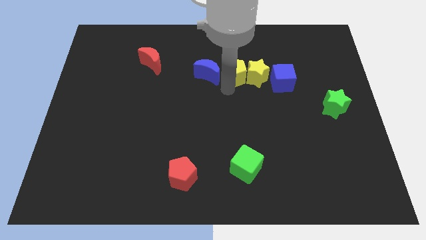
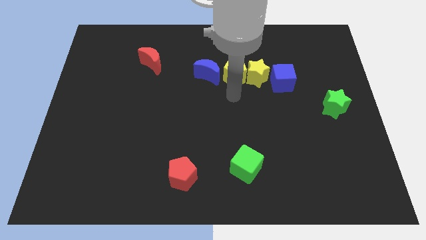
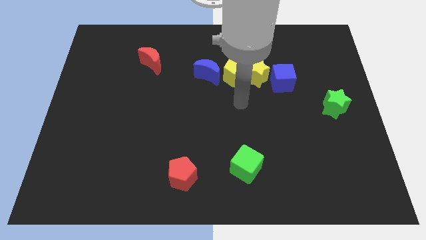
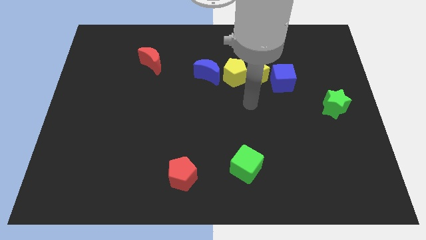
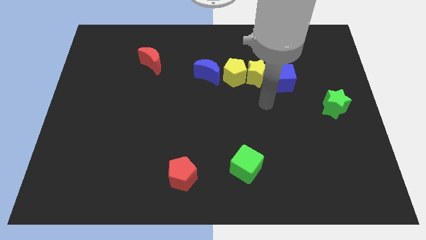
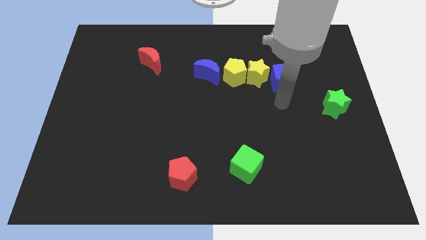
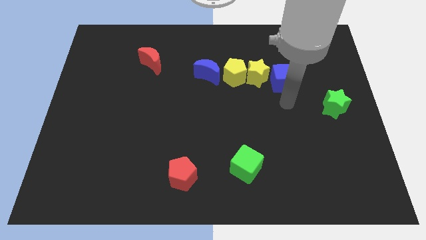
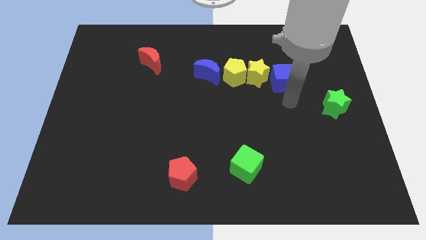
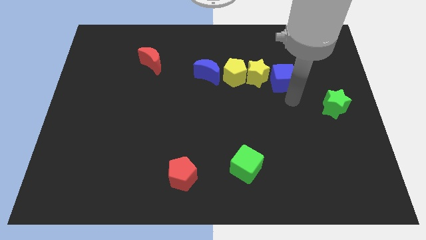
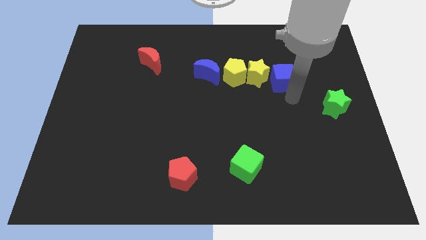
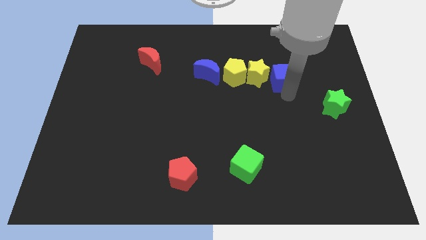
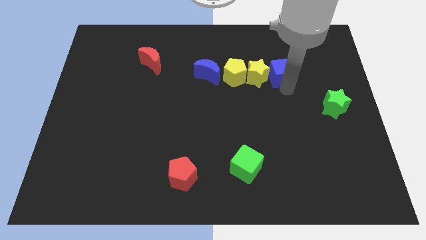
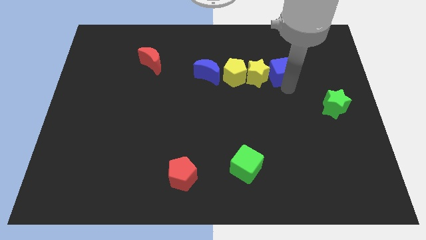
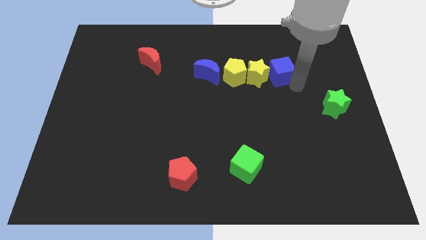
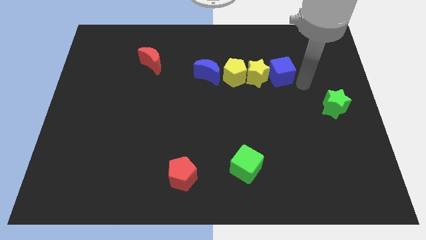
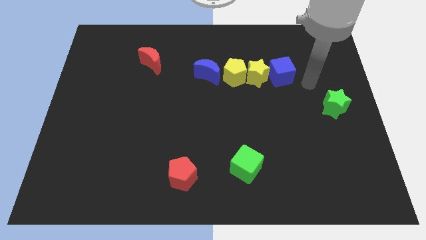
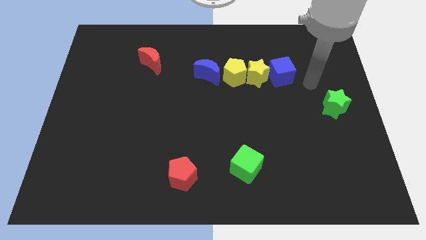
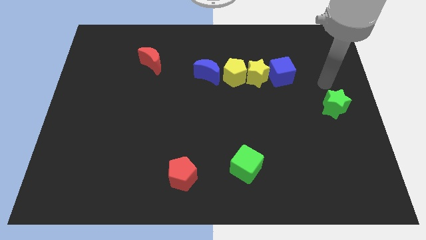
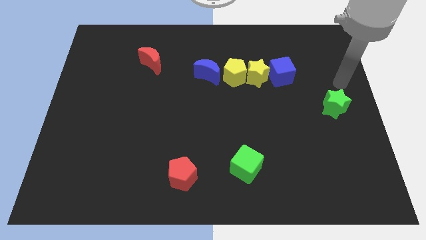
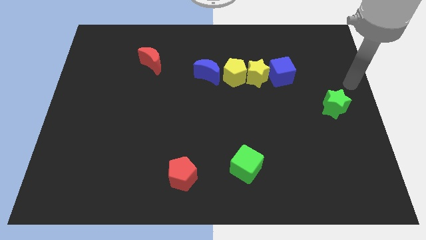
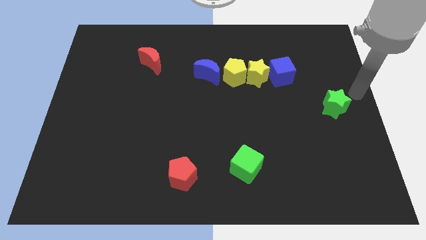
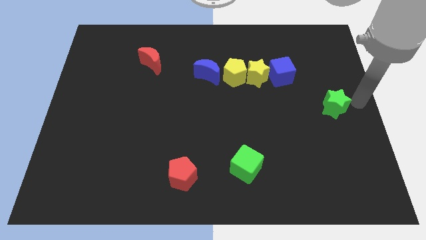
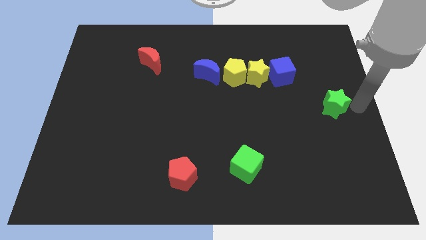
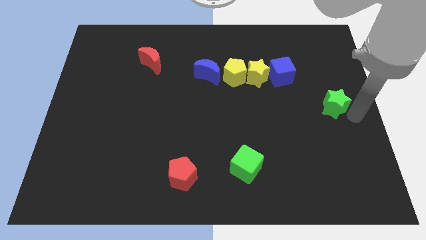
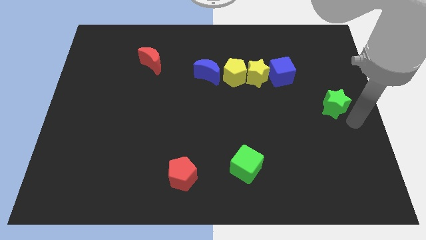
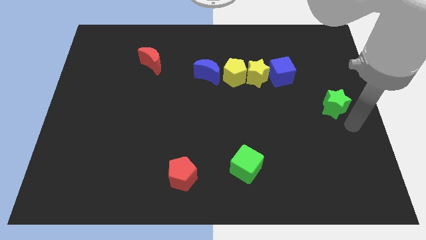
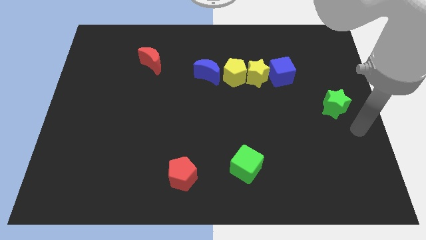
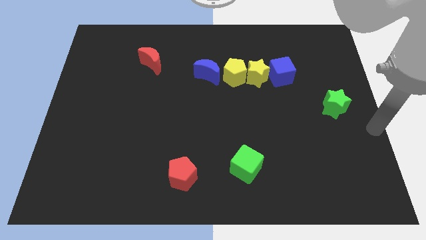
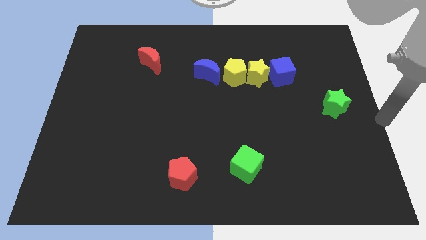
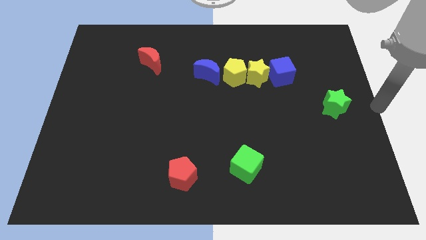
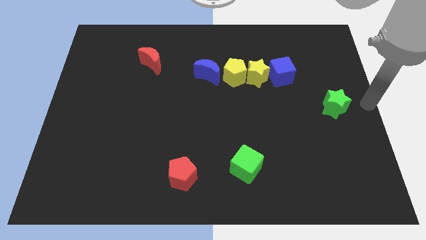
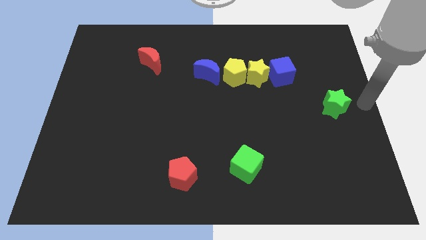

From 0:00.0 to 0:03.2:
point your hand at the right side of the green star

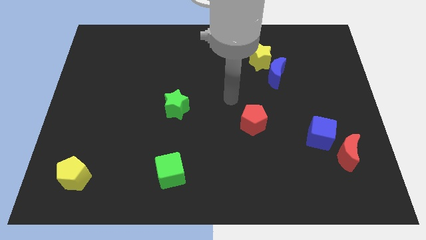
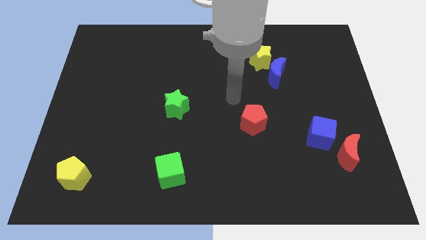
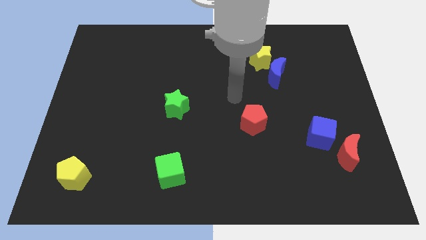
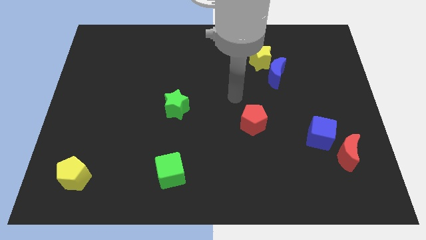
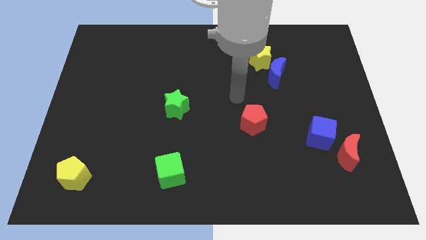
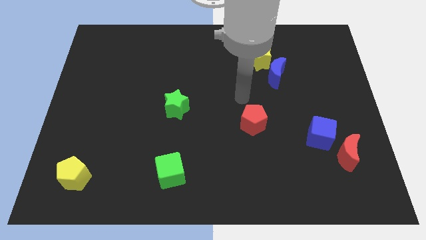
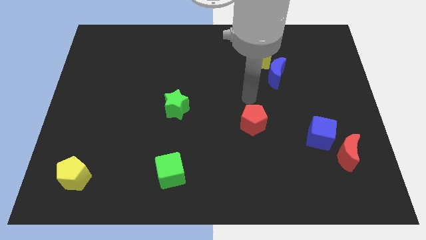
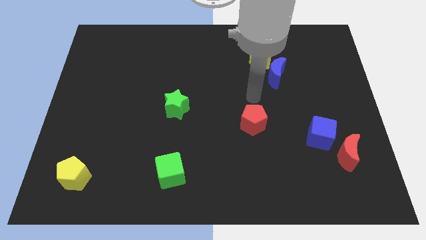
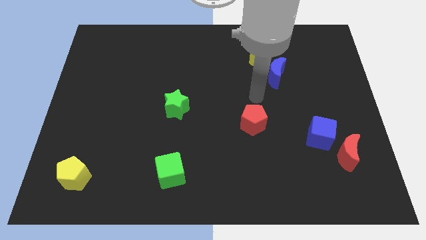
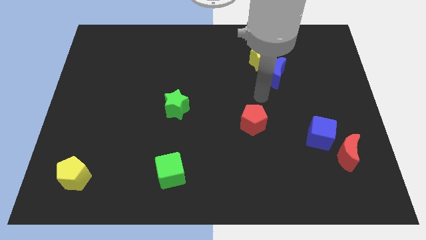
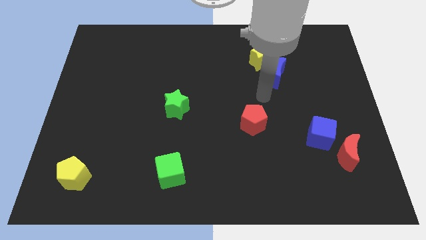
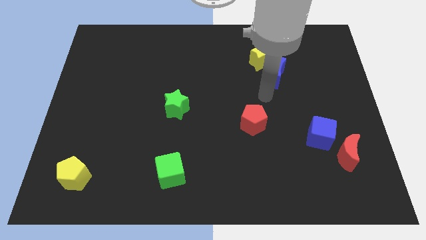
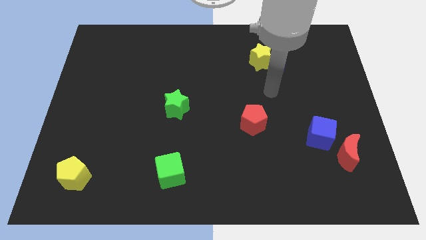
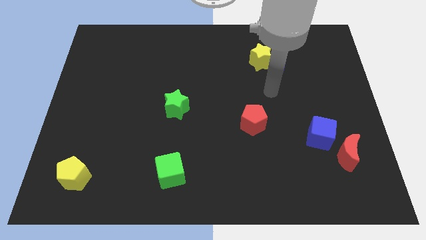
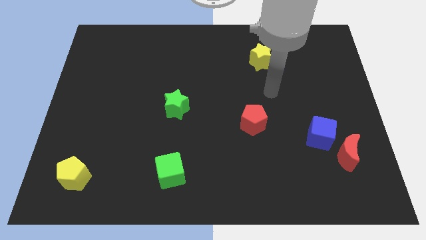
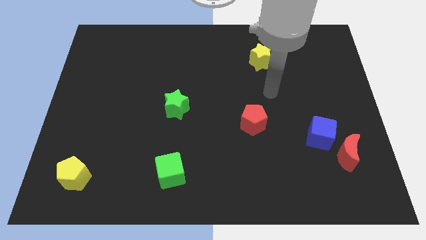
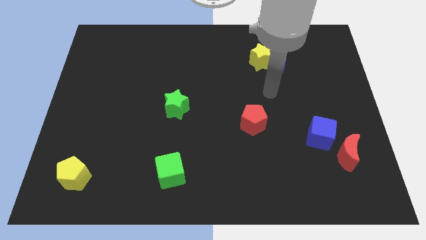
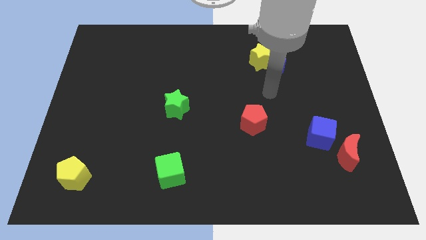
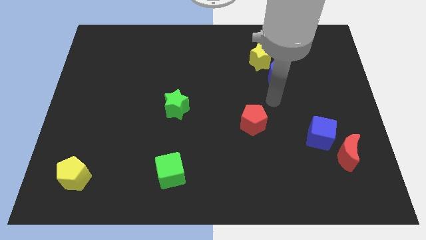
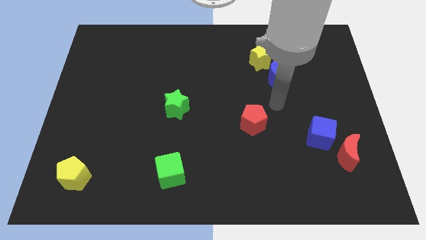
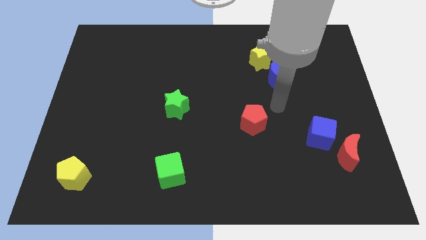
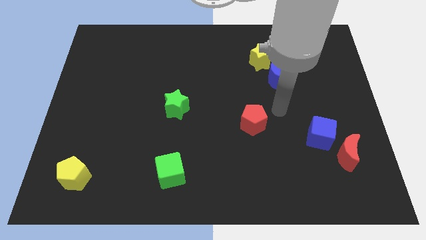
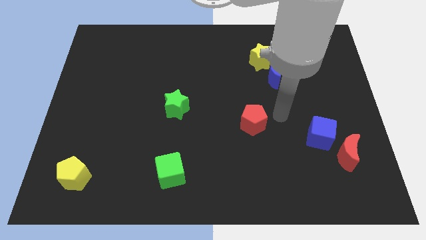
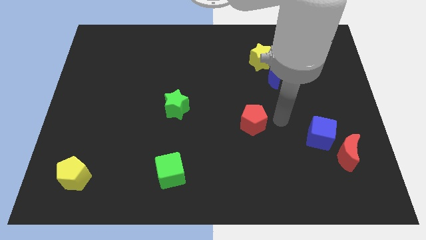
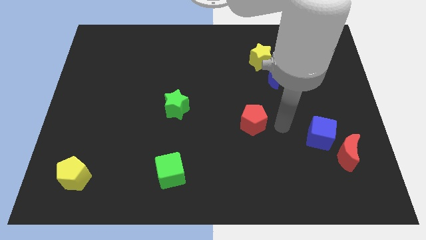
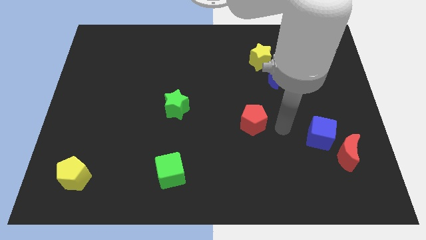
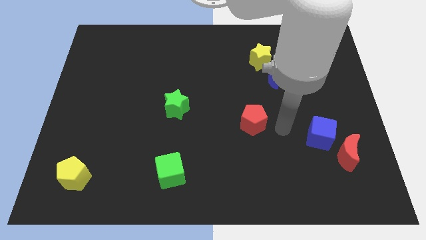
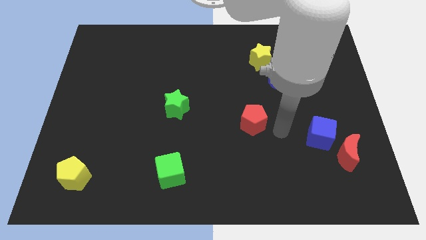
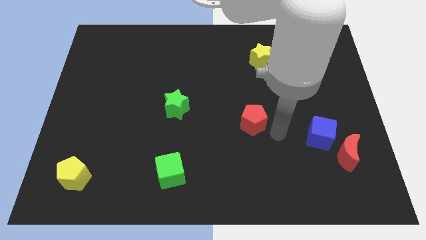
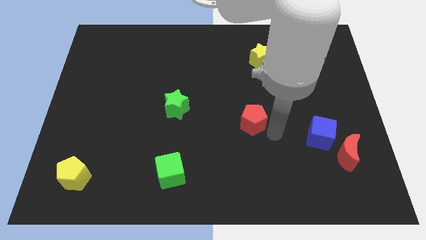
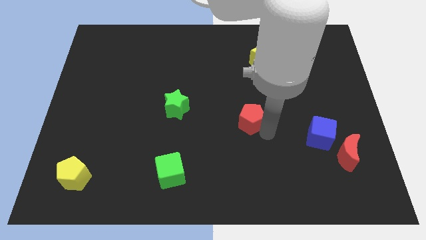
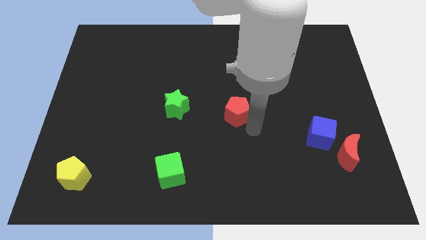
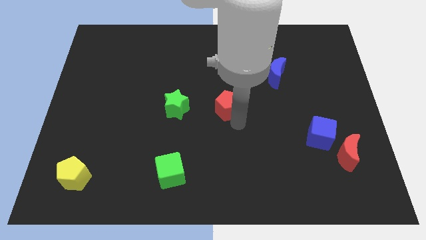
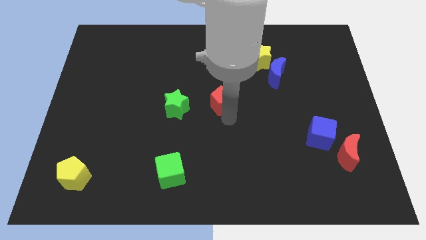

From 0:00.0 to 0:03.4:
slide the red pentagon towards the center of the board

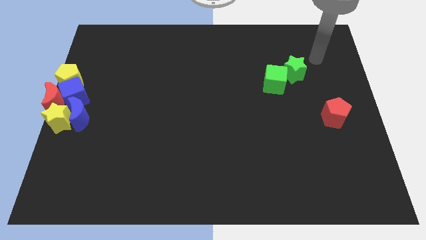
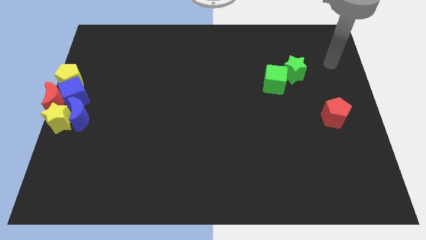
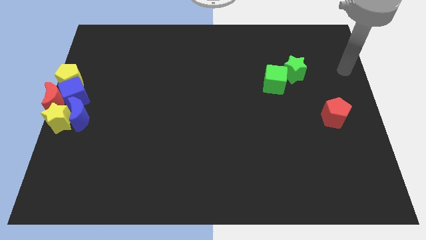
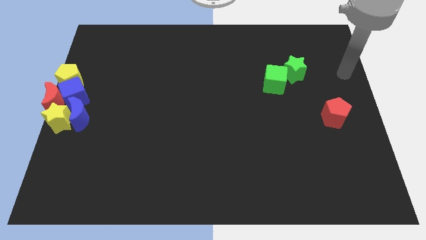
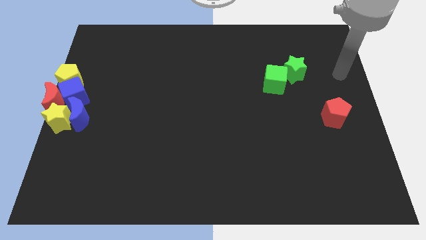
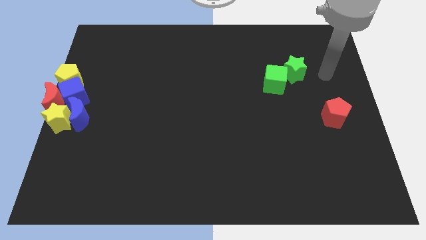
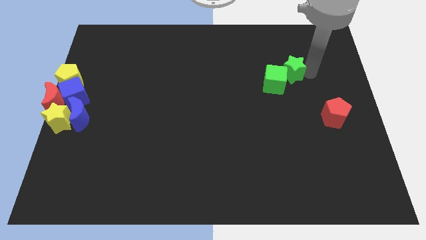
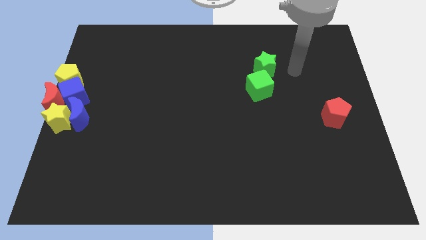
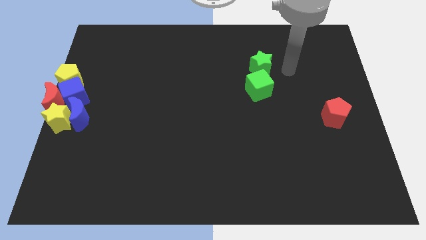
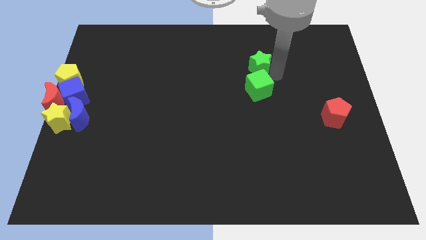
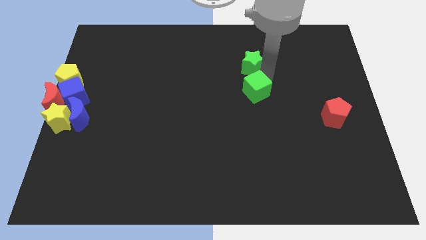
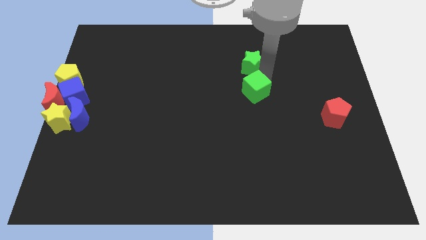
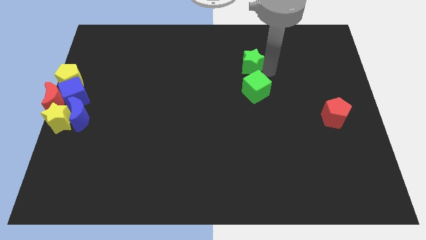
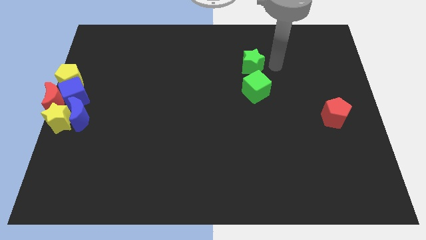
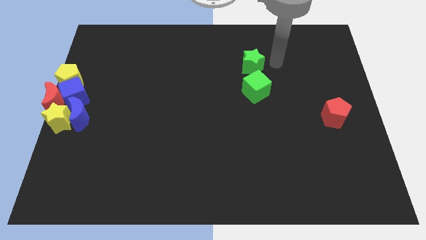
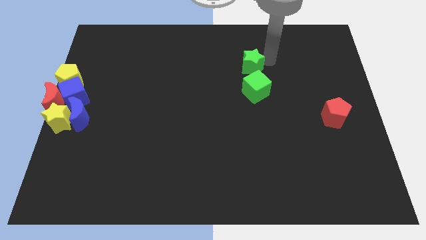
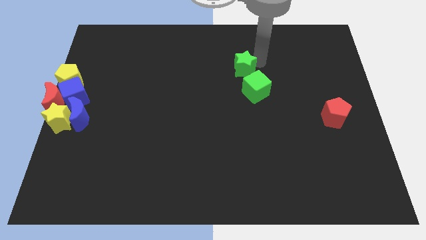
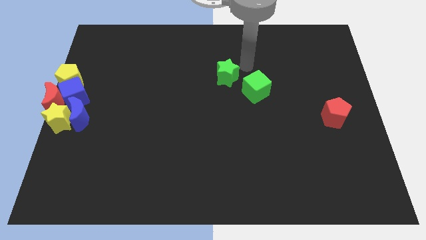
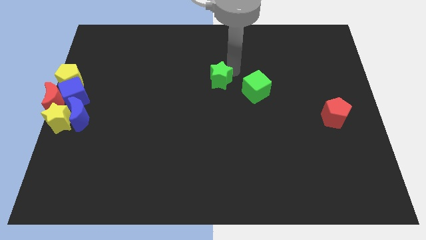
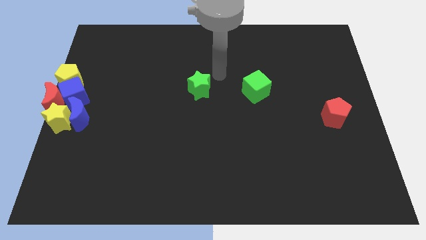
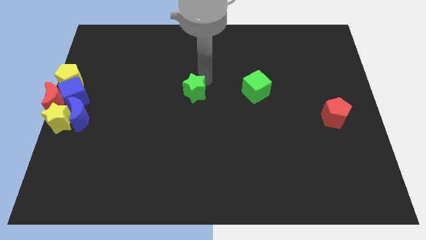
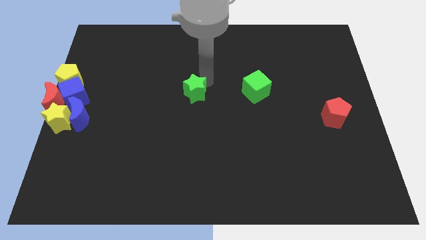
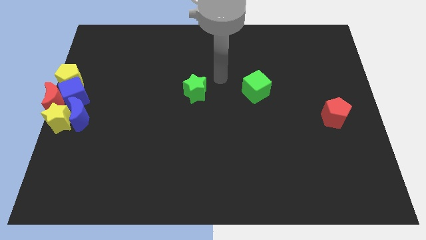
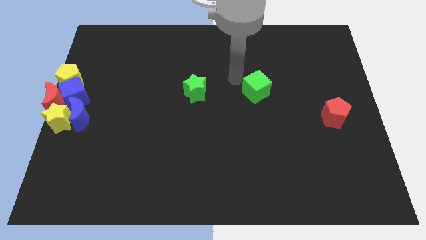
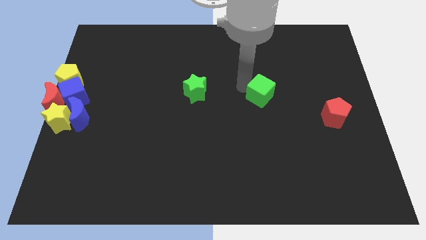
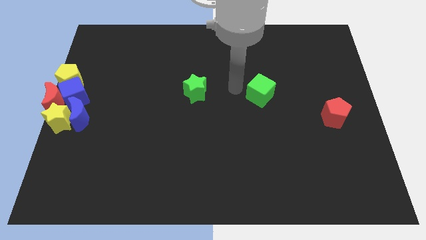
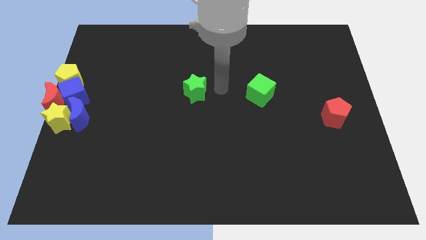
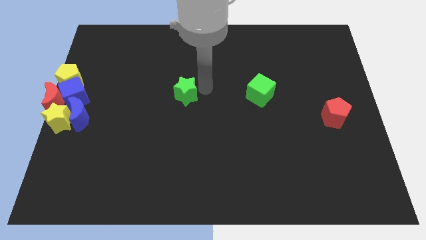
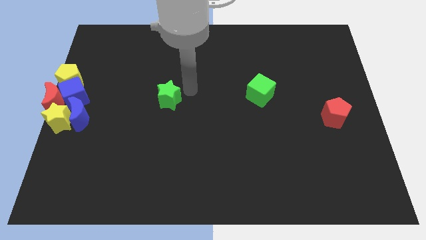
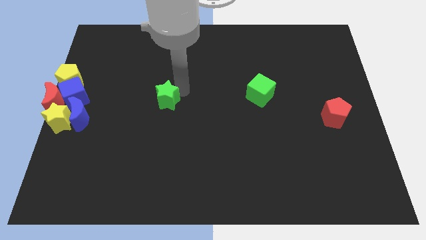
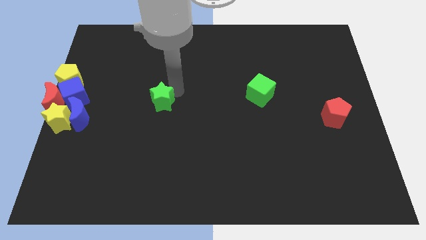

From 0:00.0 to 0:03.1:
separate the green blocks
